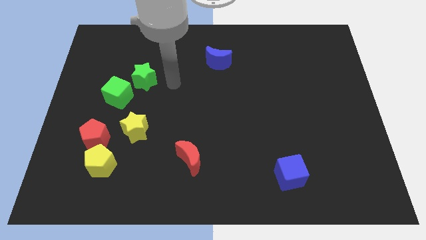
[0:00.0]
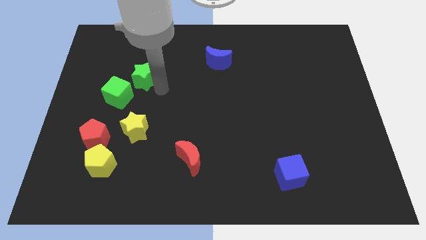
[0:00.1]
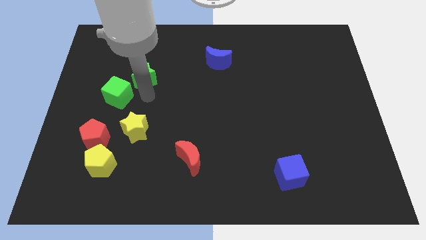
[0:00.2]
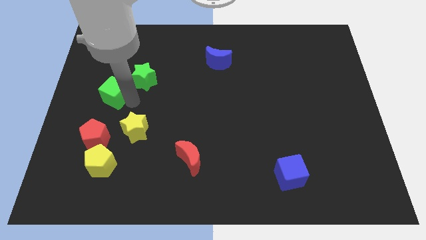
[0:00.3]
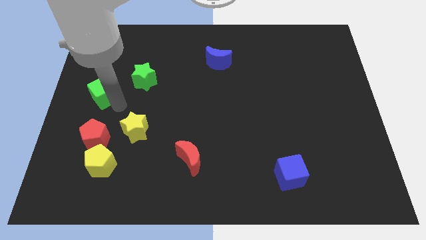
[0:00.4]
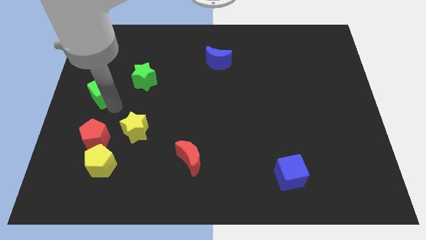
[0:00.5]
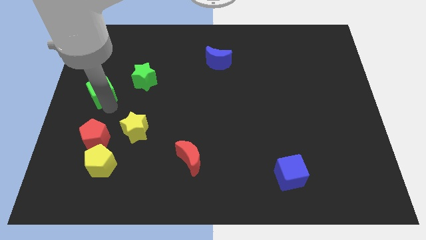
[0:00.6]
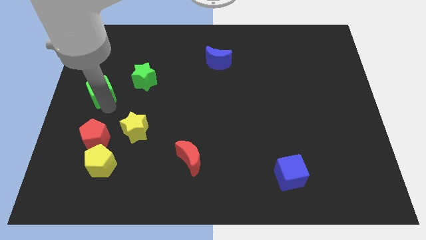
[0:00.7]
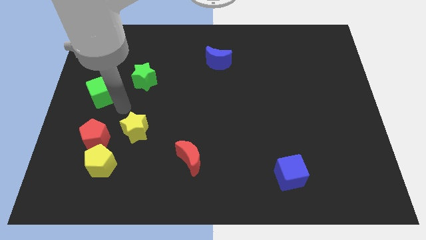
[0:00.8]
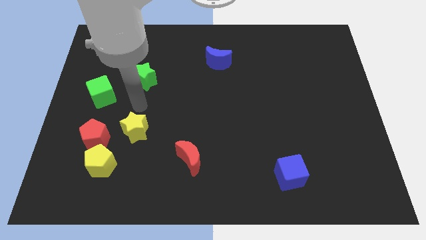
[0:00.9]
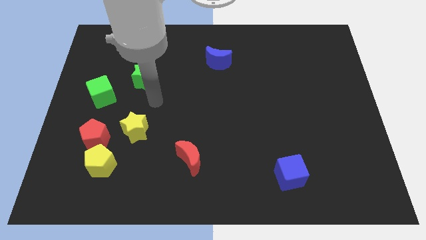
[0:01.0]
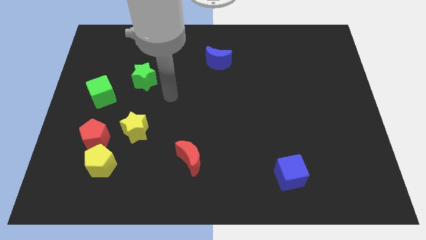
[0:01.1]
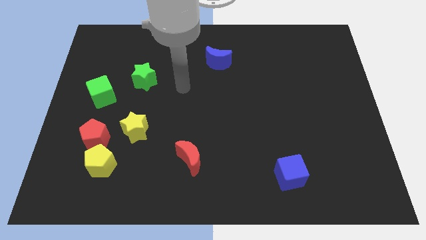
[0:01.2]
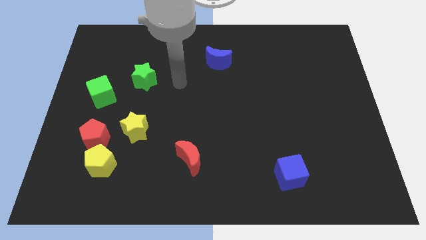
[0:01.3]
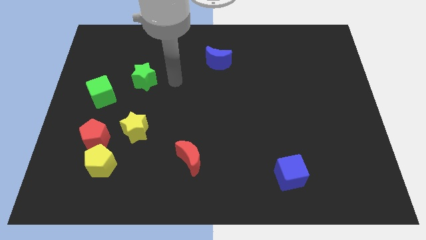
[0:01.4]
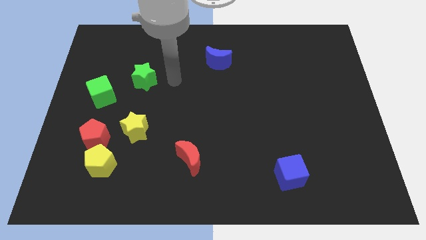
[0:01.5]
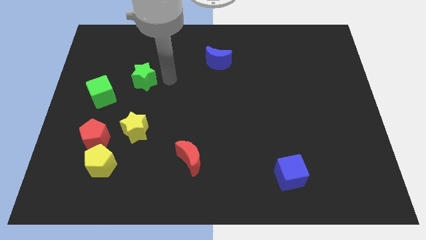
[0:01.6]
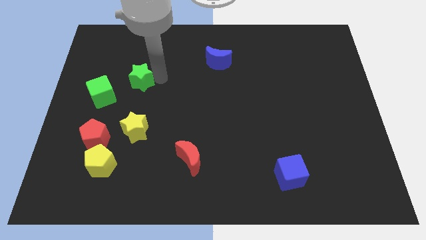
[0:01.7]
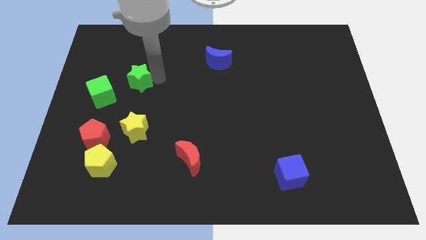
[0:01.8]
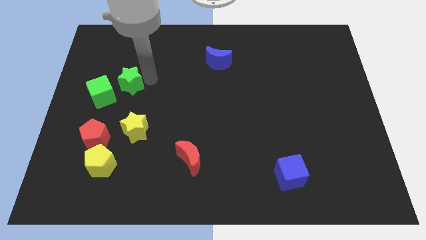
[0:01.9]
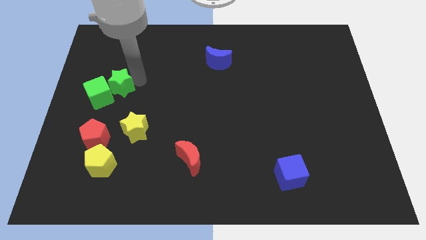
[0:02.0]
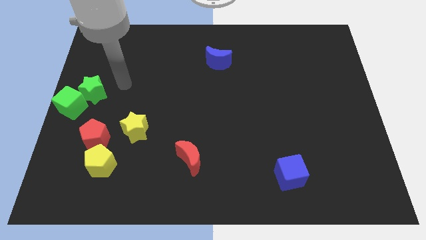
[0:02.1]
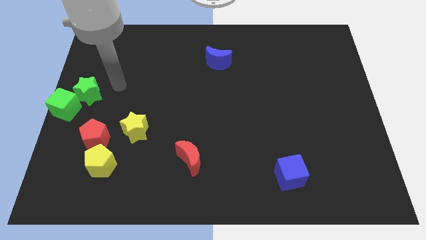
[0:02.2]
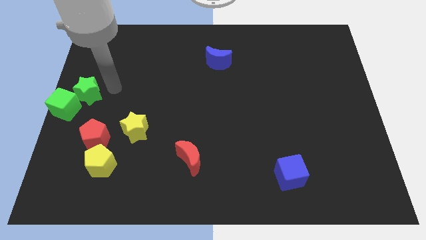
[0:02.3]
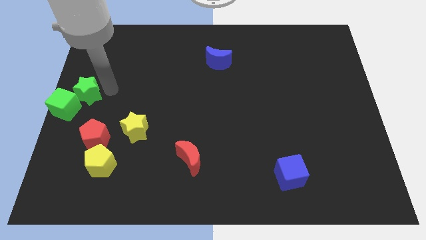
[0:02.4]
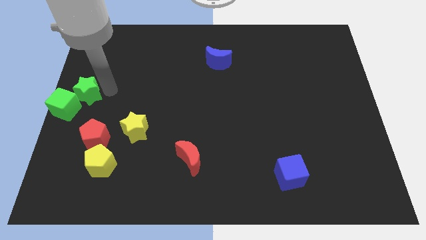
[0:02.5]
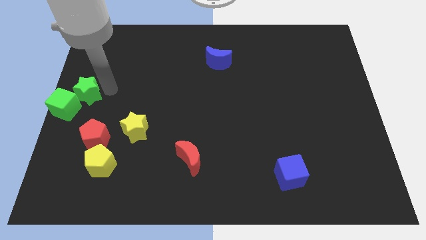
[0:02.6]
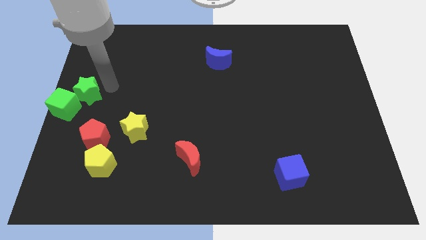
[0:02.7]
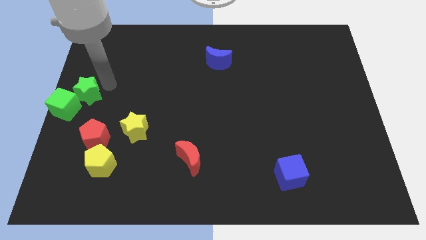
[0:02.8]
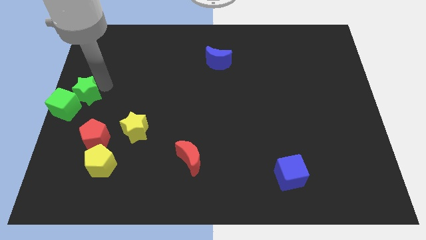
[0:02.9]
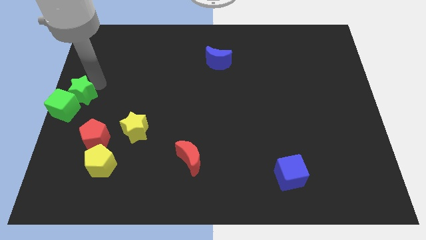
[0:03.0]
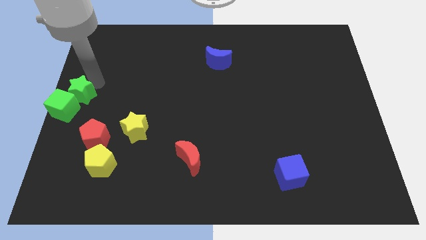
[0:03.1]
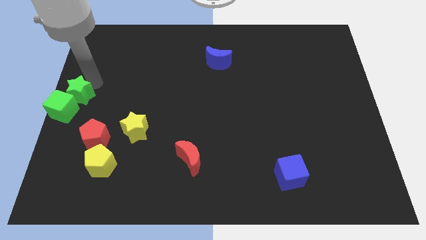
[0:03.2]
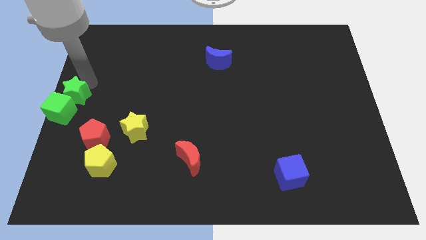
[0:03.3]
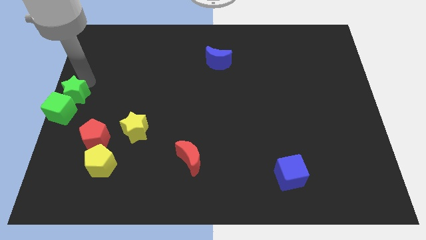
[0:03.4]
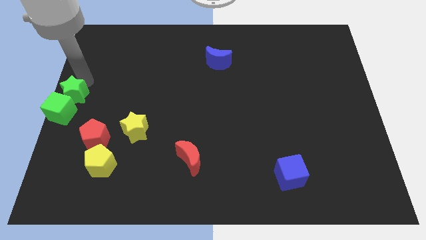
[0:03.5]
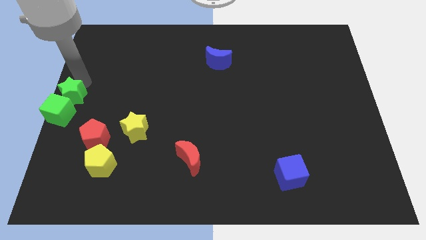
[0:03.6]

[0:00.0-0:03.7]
place the green star and the green cube at the center left corner

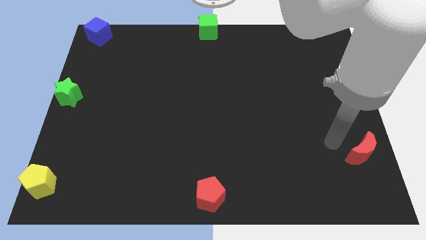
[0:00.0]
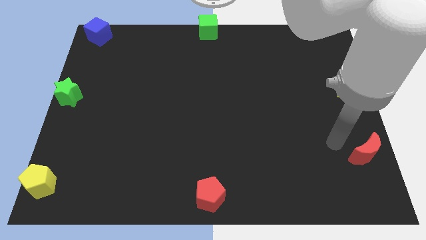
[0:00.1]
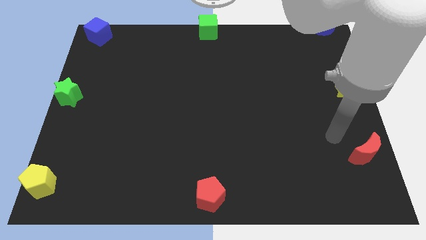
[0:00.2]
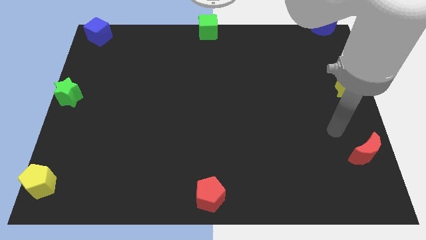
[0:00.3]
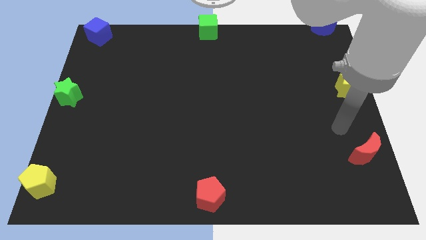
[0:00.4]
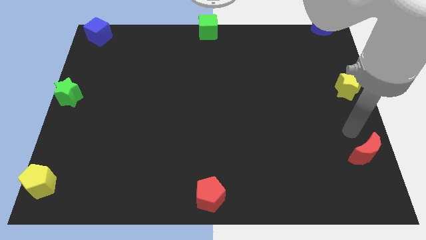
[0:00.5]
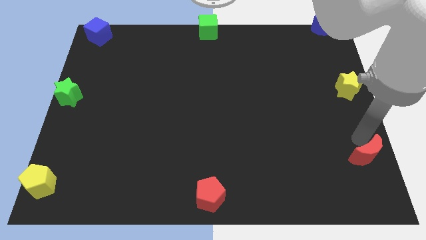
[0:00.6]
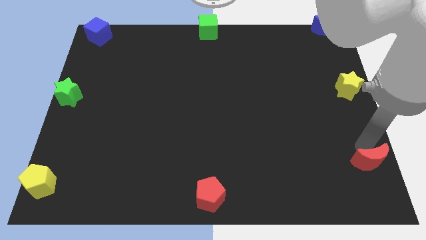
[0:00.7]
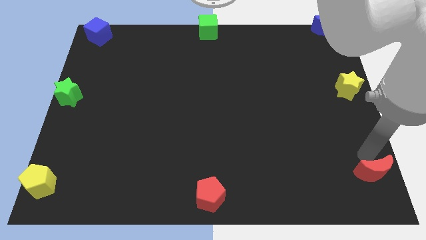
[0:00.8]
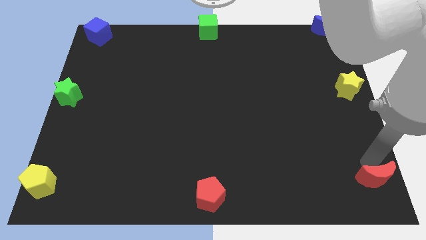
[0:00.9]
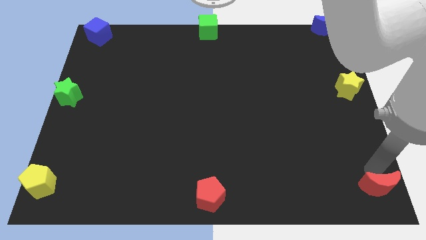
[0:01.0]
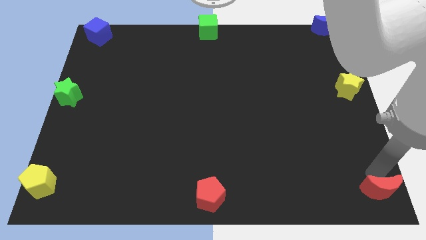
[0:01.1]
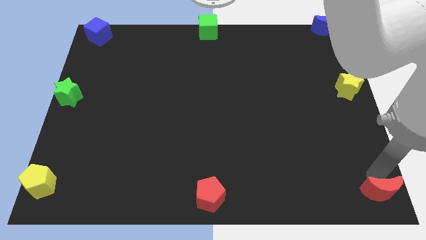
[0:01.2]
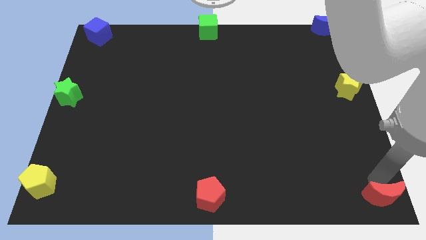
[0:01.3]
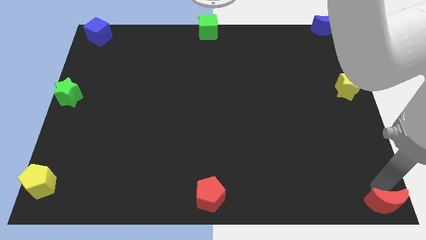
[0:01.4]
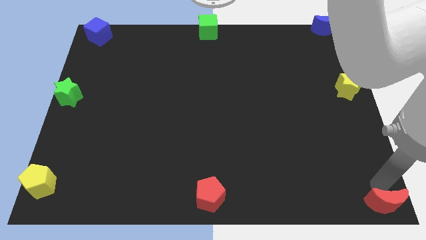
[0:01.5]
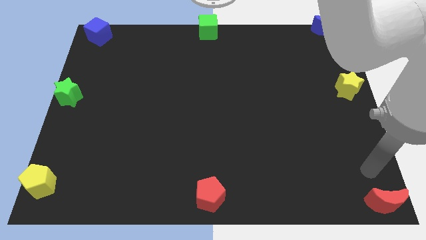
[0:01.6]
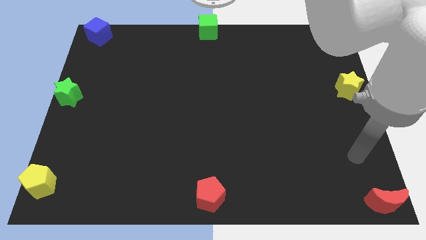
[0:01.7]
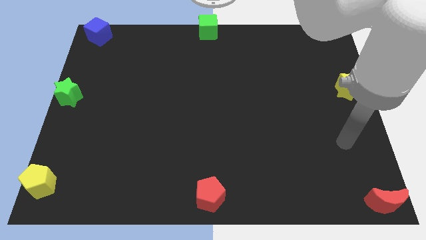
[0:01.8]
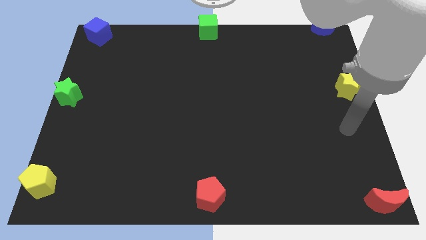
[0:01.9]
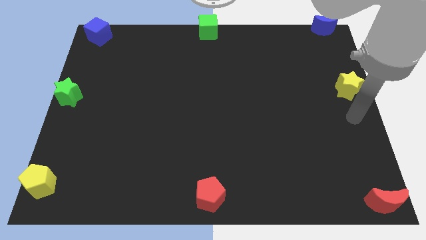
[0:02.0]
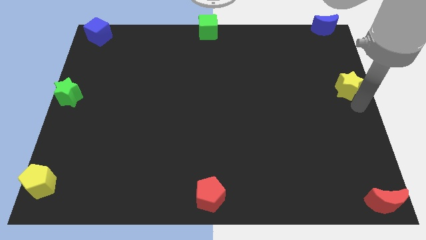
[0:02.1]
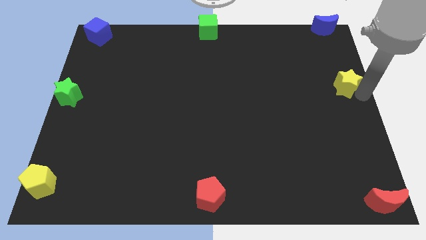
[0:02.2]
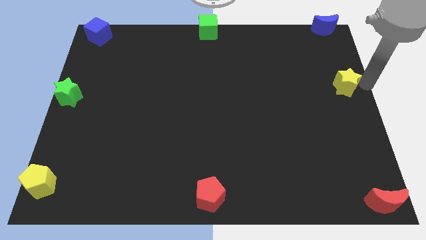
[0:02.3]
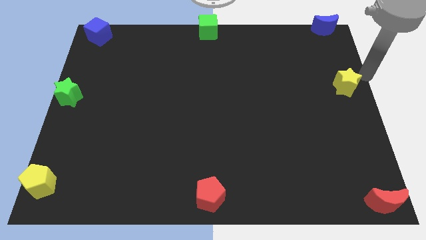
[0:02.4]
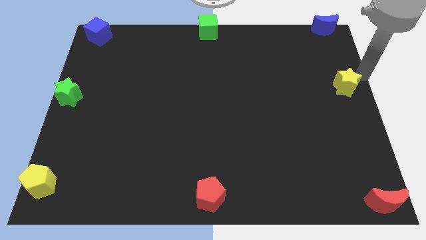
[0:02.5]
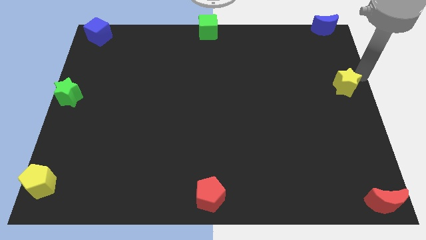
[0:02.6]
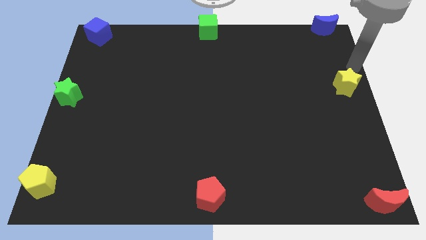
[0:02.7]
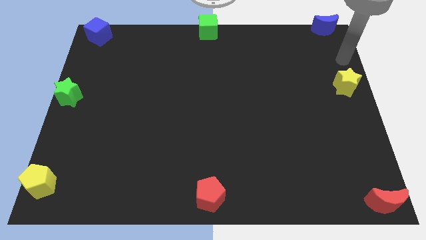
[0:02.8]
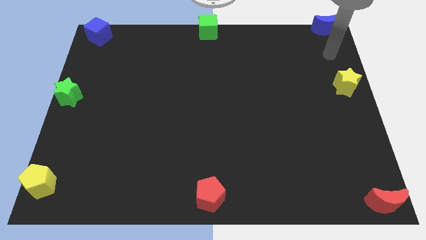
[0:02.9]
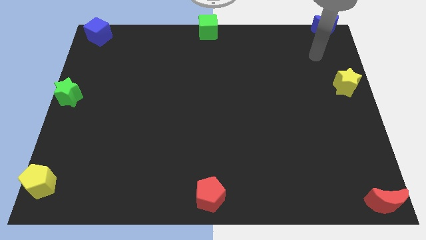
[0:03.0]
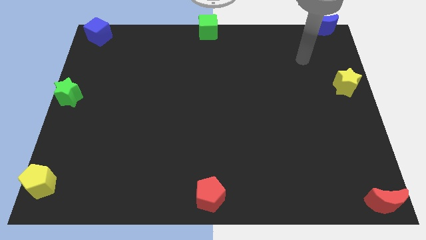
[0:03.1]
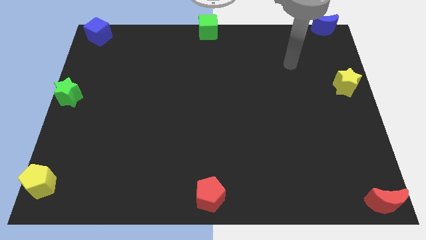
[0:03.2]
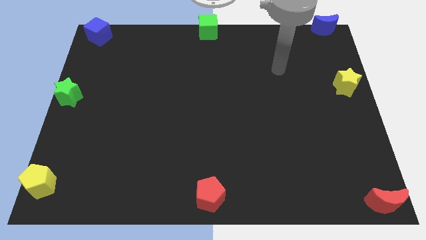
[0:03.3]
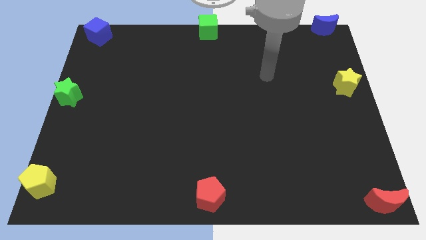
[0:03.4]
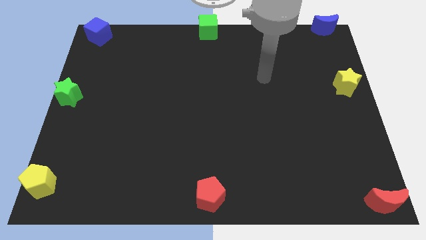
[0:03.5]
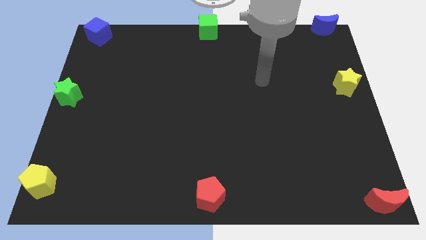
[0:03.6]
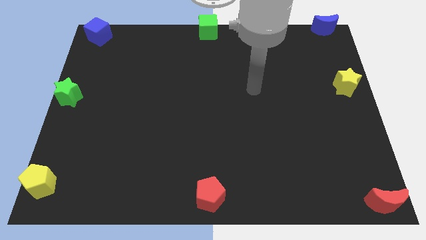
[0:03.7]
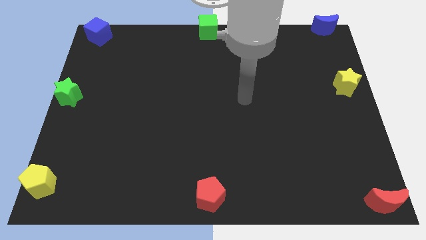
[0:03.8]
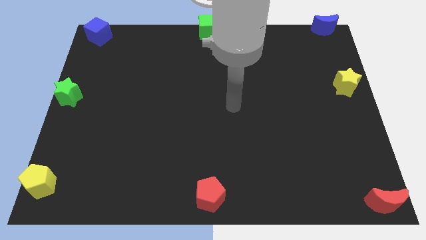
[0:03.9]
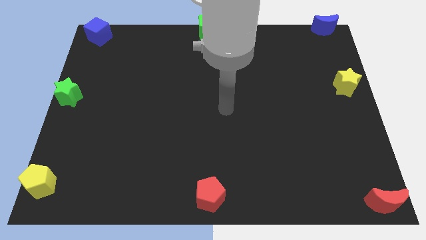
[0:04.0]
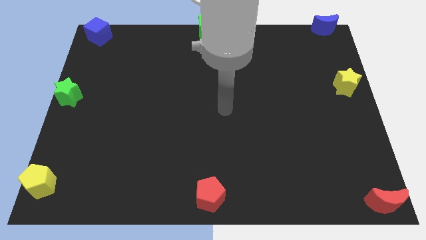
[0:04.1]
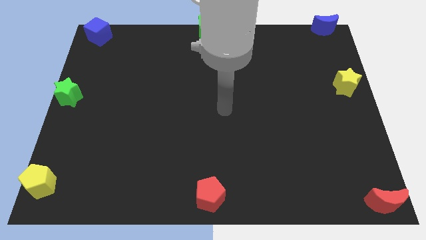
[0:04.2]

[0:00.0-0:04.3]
place the red moon at the bottom right corner of the board

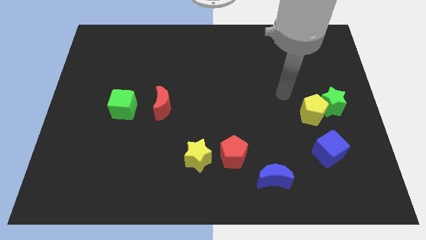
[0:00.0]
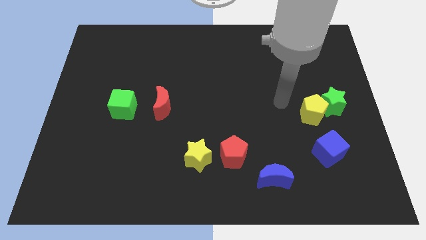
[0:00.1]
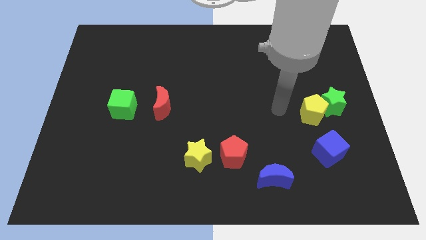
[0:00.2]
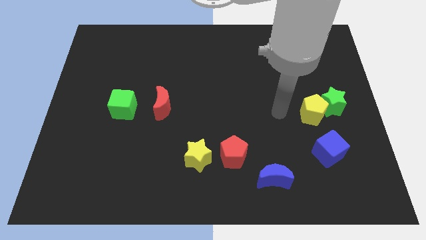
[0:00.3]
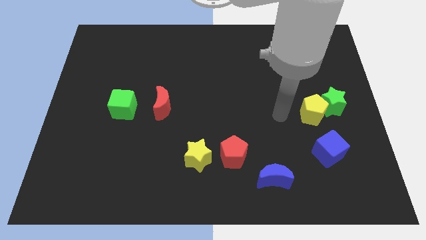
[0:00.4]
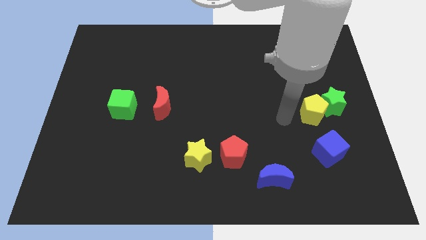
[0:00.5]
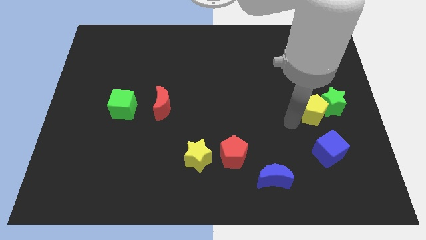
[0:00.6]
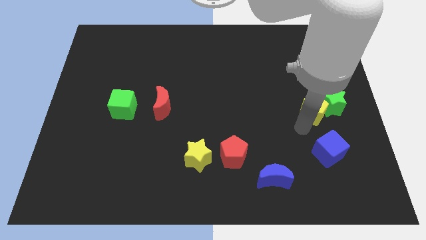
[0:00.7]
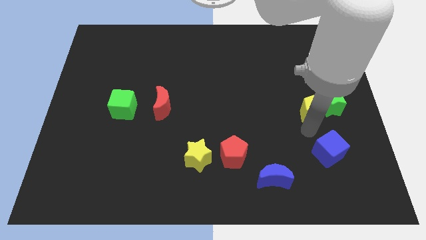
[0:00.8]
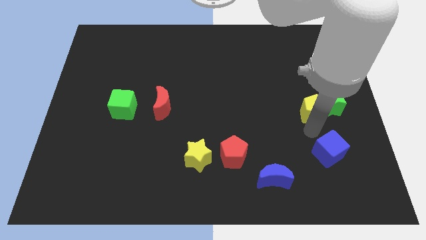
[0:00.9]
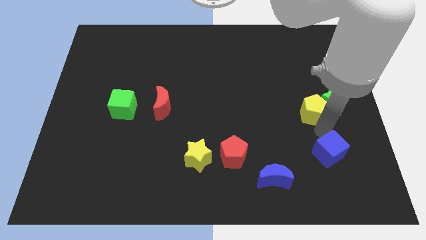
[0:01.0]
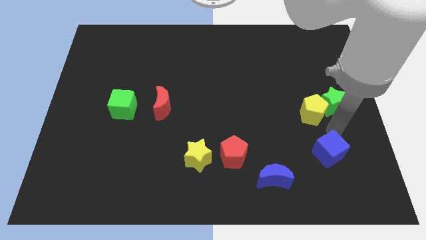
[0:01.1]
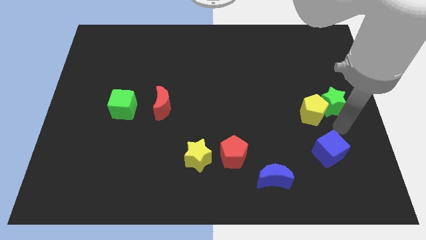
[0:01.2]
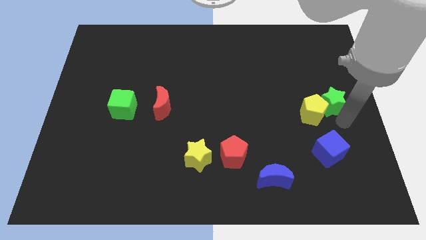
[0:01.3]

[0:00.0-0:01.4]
place your arm close to the green star
